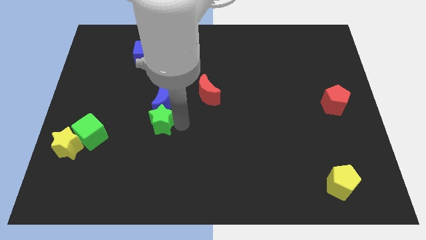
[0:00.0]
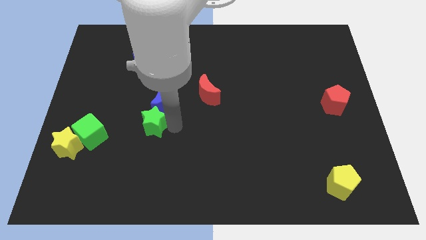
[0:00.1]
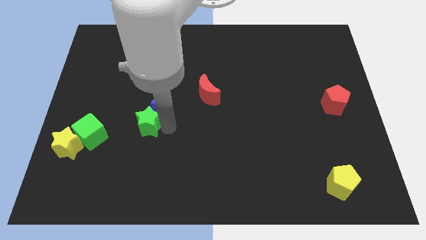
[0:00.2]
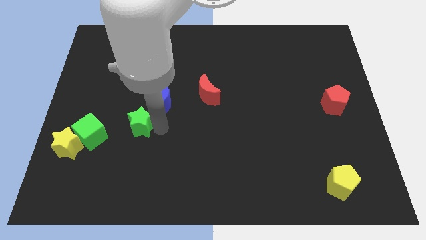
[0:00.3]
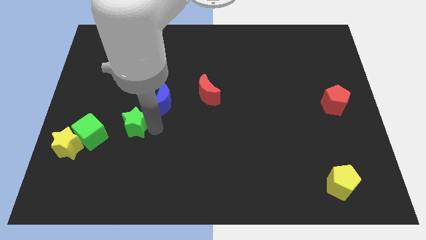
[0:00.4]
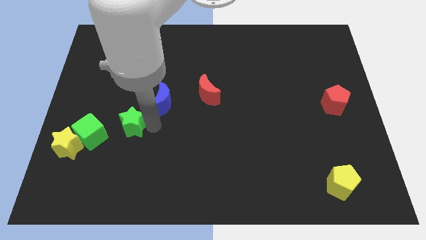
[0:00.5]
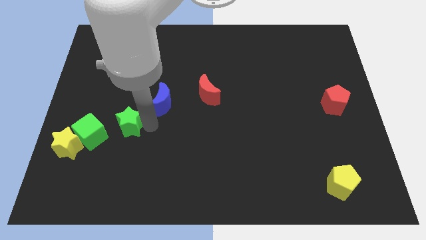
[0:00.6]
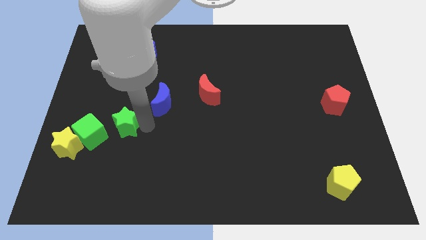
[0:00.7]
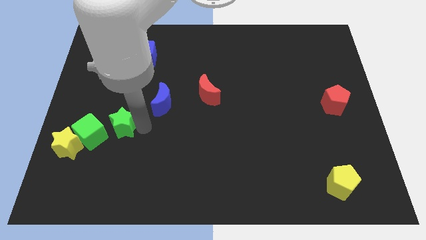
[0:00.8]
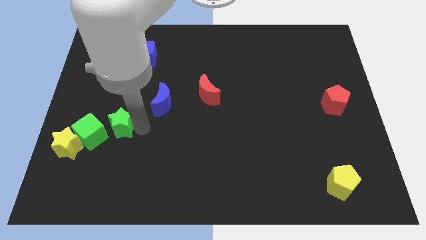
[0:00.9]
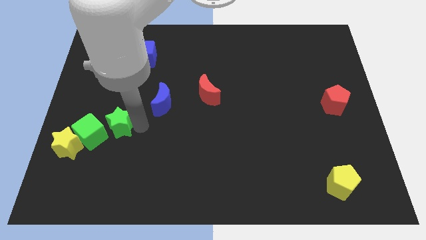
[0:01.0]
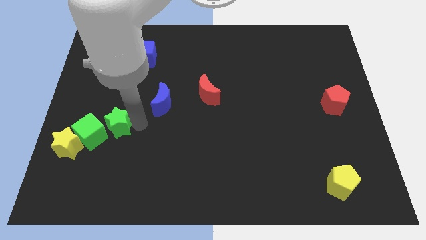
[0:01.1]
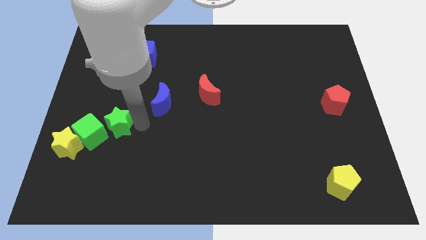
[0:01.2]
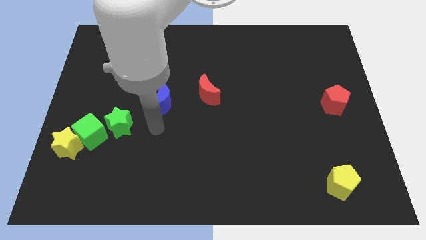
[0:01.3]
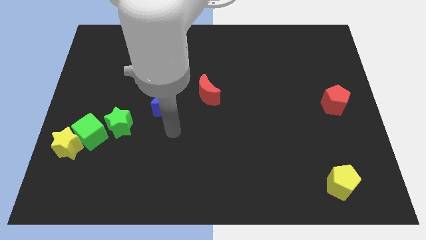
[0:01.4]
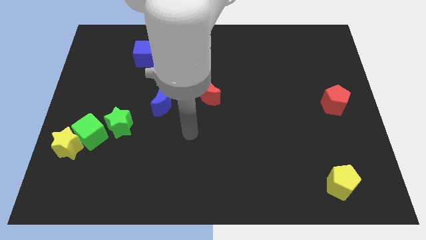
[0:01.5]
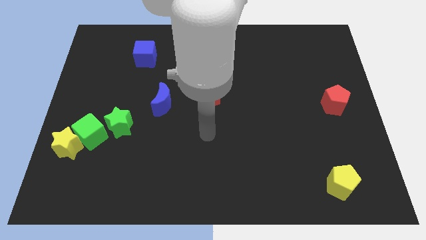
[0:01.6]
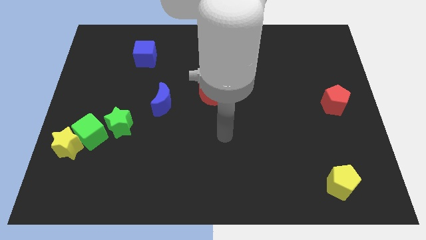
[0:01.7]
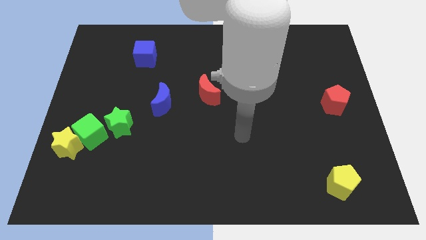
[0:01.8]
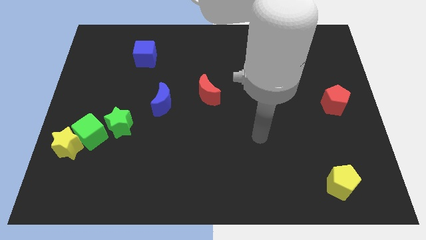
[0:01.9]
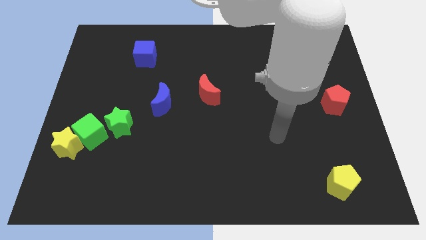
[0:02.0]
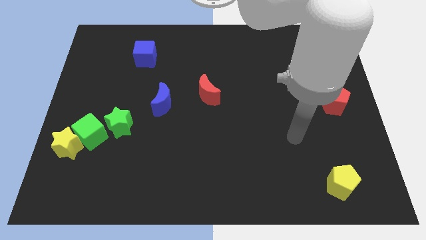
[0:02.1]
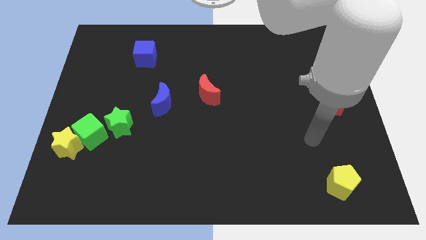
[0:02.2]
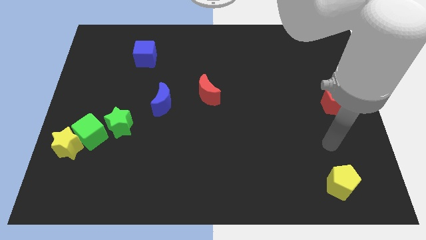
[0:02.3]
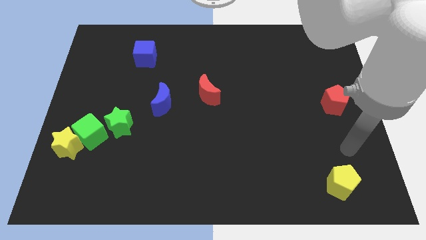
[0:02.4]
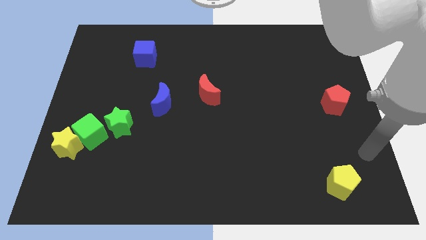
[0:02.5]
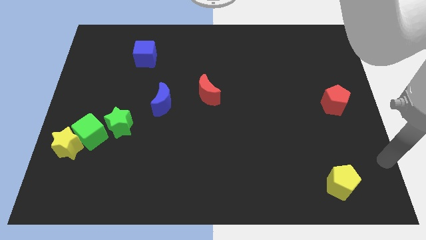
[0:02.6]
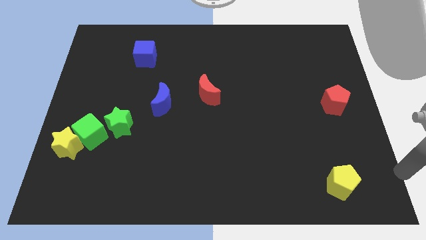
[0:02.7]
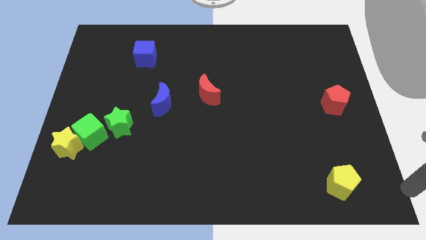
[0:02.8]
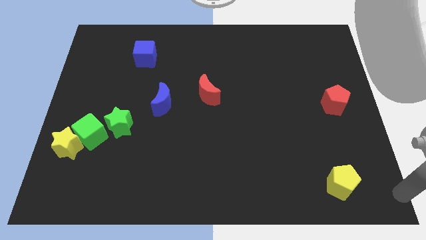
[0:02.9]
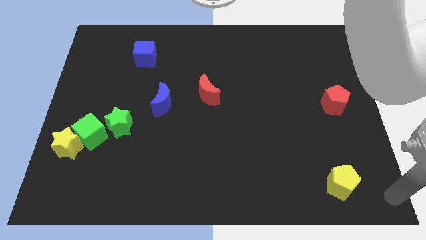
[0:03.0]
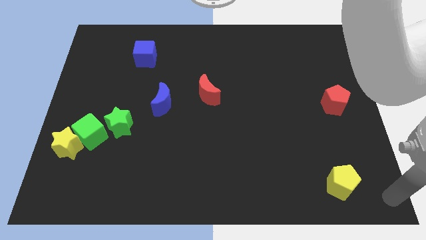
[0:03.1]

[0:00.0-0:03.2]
push the green star close to the green cube

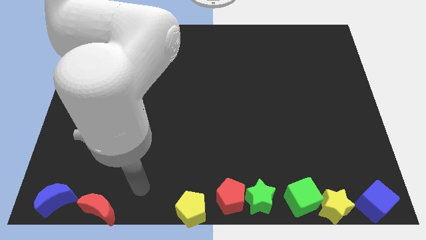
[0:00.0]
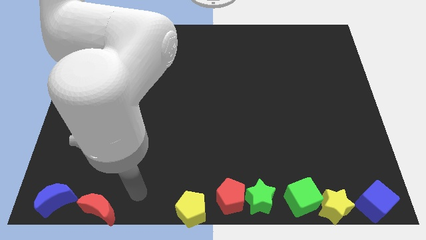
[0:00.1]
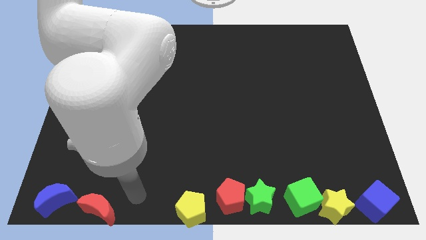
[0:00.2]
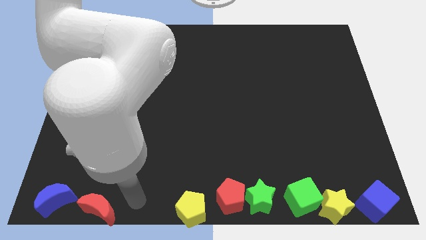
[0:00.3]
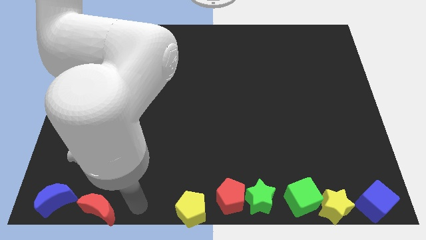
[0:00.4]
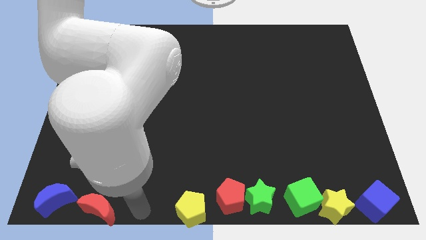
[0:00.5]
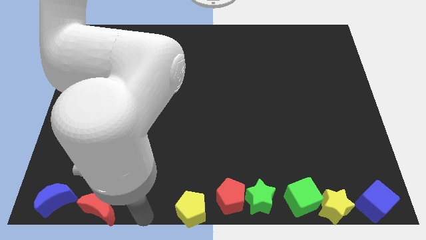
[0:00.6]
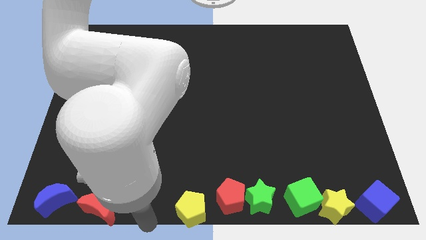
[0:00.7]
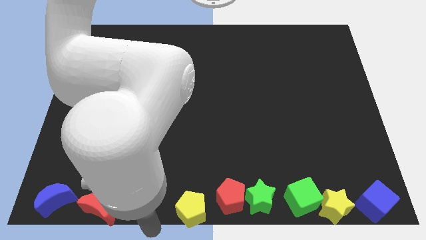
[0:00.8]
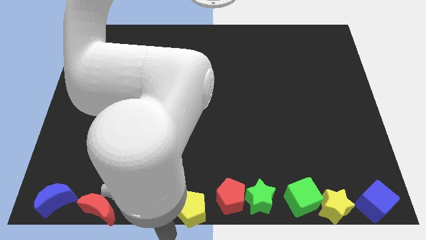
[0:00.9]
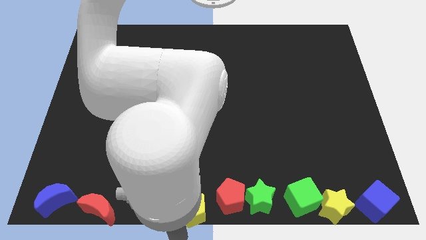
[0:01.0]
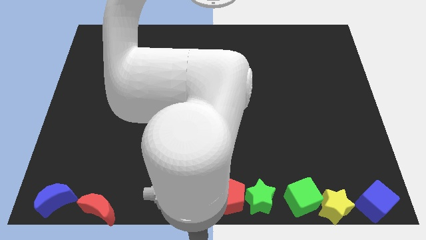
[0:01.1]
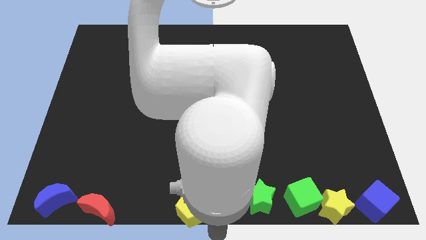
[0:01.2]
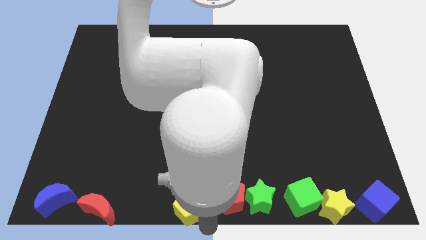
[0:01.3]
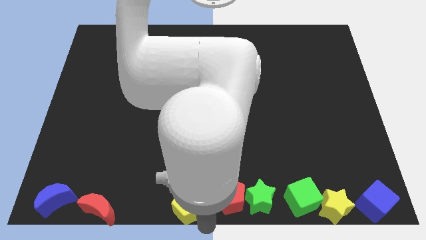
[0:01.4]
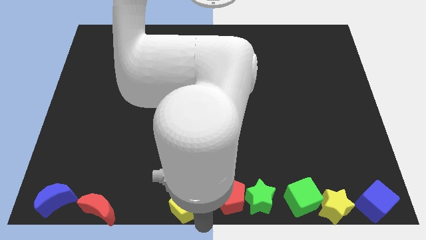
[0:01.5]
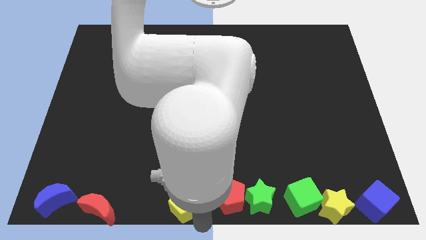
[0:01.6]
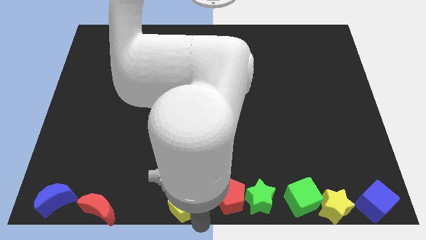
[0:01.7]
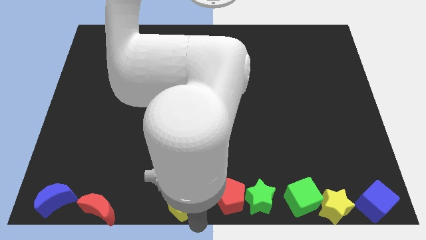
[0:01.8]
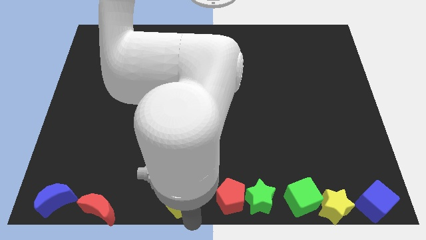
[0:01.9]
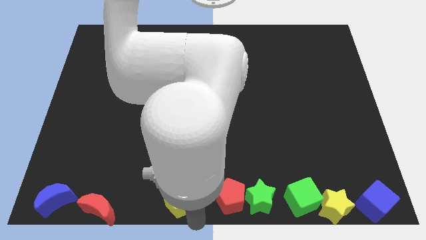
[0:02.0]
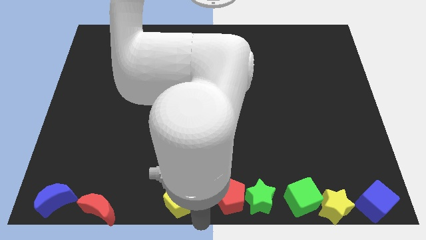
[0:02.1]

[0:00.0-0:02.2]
adjust the yellow pentagon slightly towards up

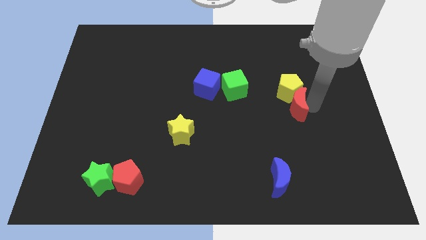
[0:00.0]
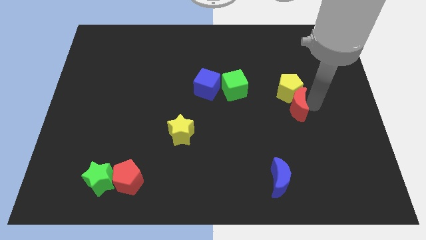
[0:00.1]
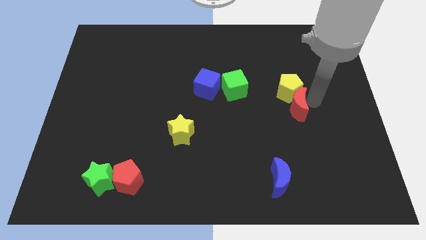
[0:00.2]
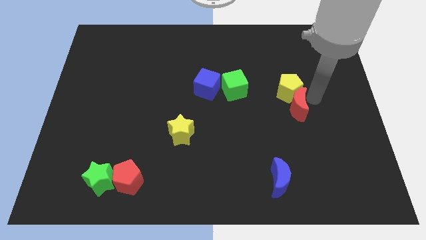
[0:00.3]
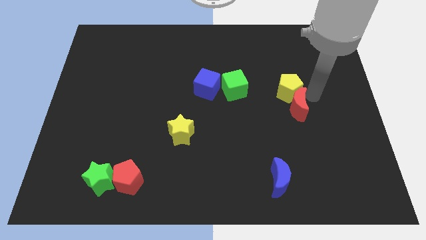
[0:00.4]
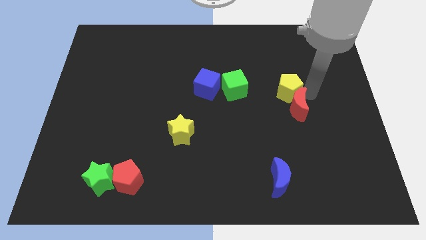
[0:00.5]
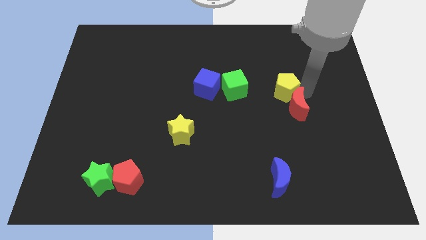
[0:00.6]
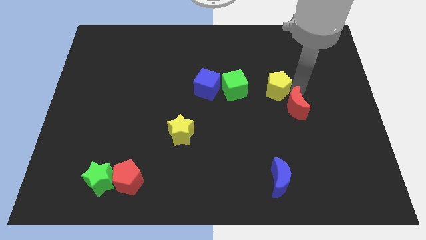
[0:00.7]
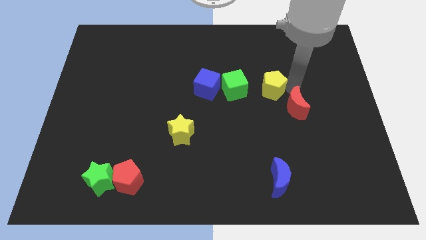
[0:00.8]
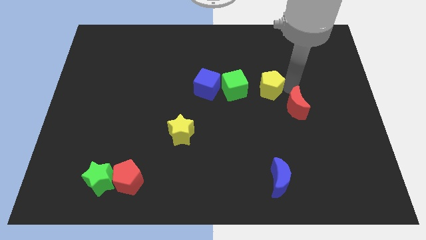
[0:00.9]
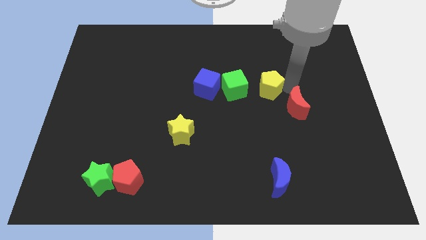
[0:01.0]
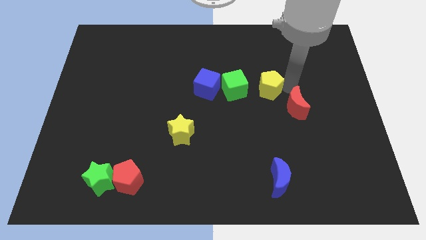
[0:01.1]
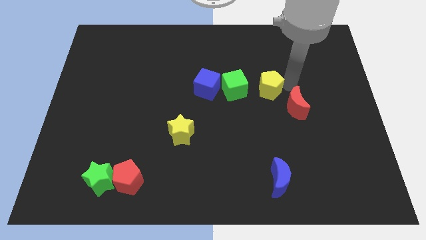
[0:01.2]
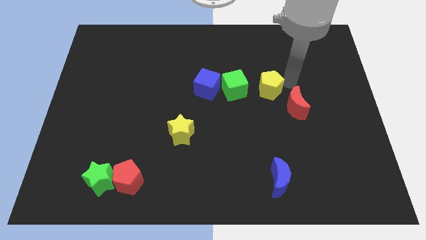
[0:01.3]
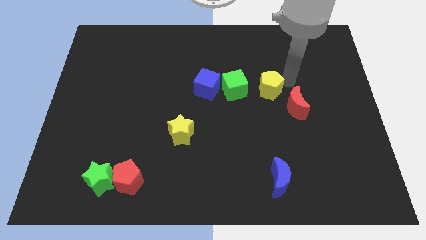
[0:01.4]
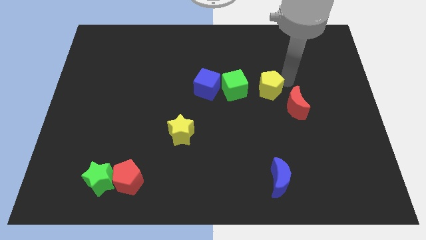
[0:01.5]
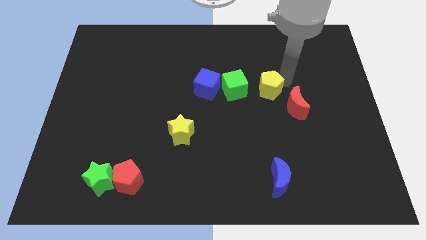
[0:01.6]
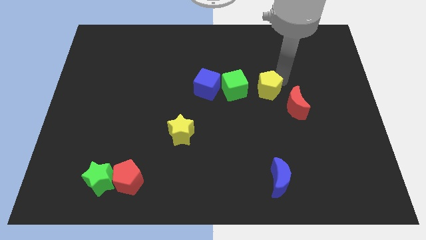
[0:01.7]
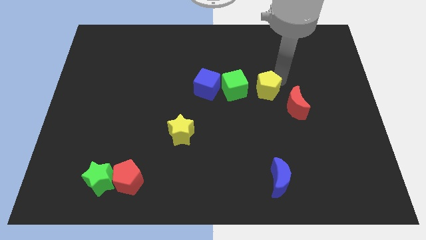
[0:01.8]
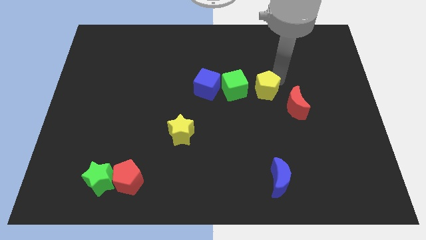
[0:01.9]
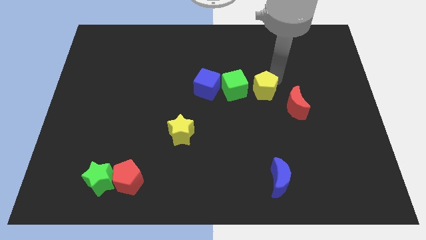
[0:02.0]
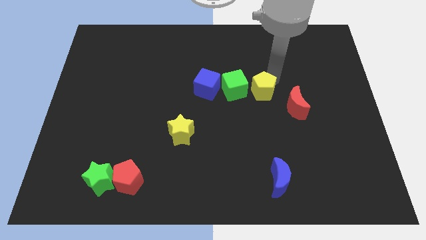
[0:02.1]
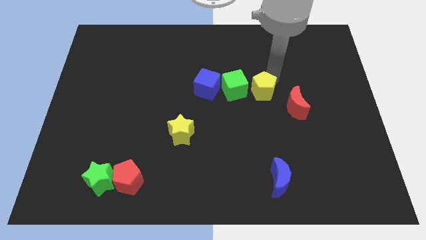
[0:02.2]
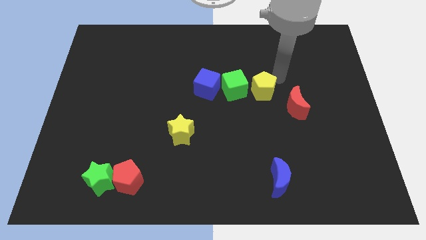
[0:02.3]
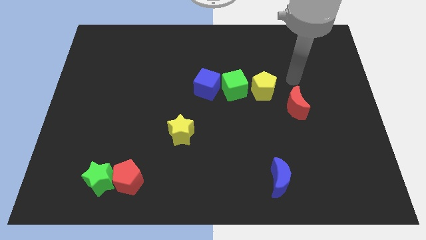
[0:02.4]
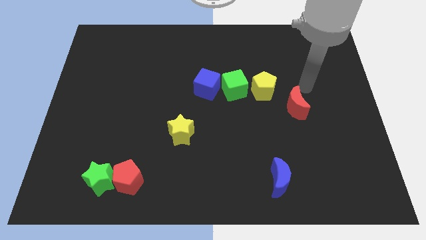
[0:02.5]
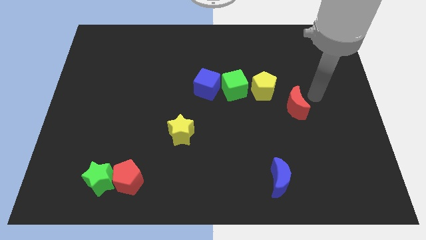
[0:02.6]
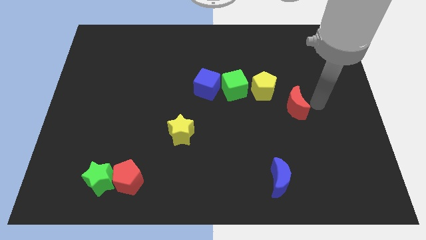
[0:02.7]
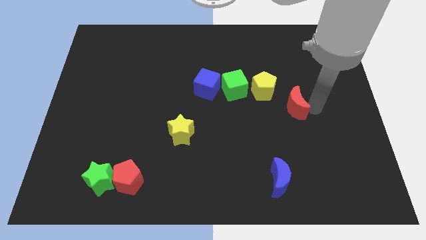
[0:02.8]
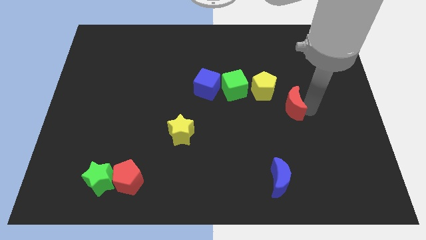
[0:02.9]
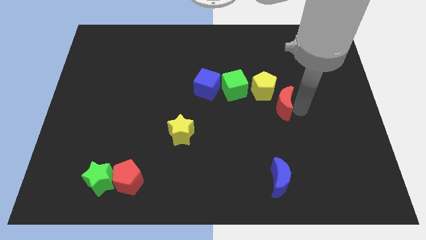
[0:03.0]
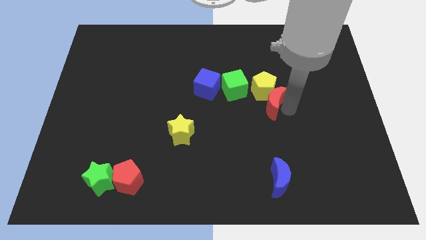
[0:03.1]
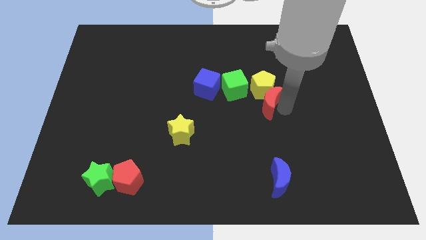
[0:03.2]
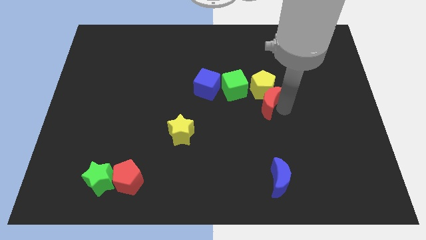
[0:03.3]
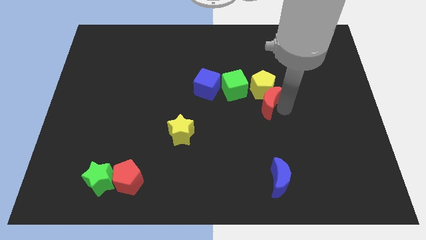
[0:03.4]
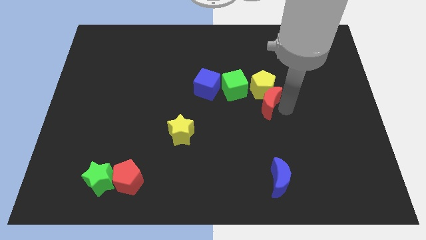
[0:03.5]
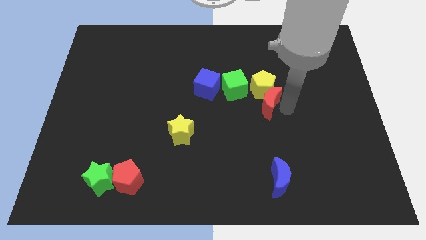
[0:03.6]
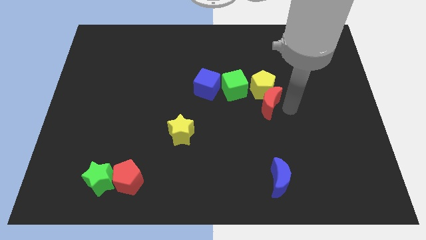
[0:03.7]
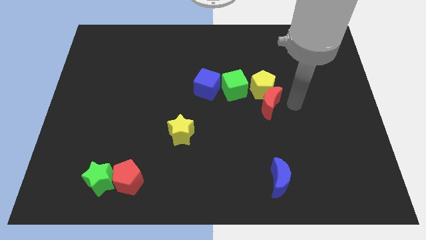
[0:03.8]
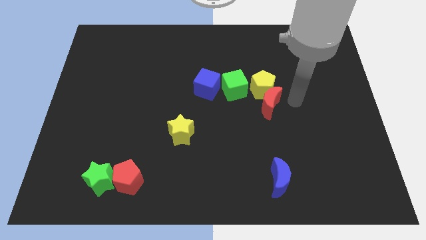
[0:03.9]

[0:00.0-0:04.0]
move the yellow pentagon to the right of the green cube
